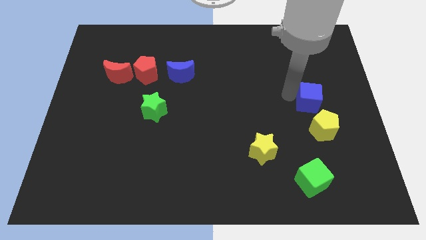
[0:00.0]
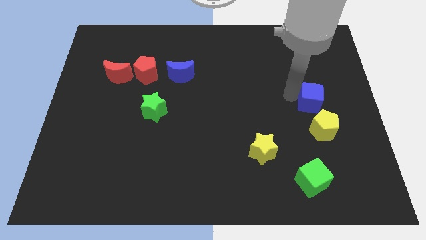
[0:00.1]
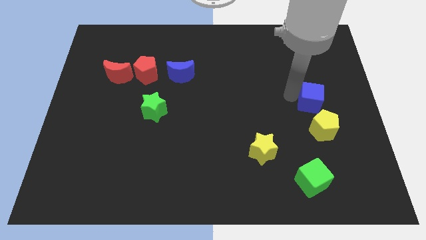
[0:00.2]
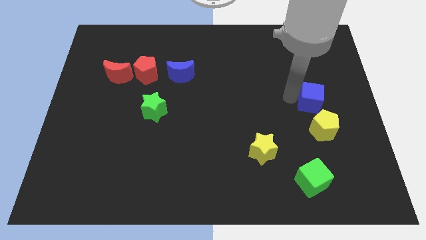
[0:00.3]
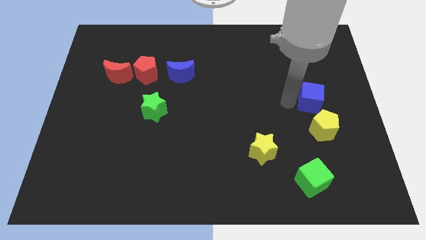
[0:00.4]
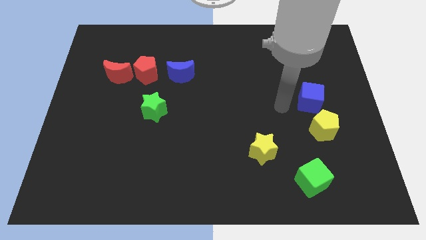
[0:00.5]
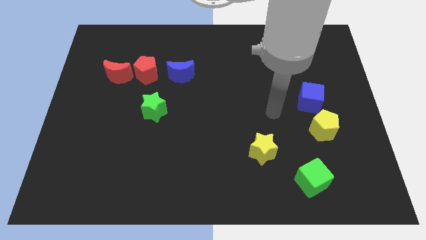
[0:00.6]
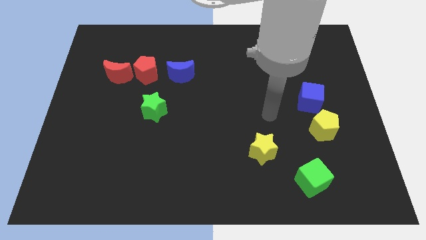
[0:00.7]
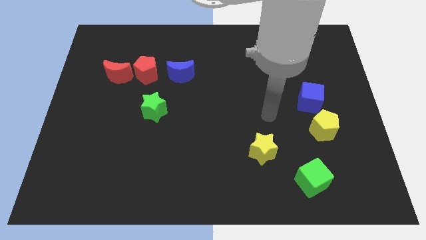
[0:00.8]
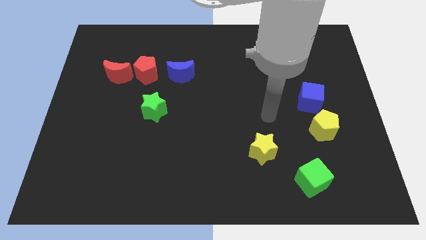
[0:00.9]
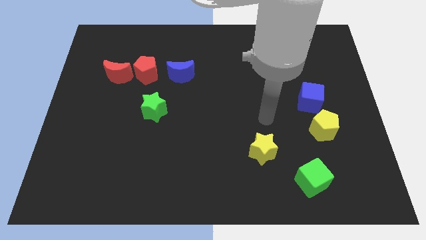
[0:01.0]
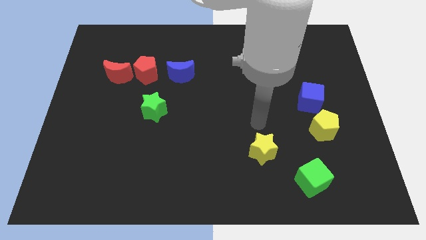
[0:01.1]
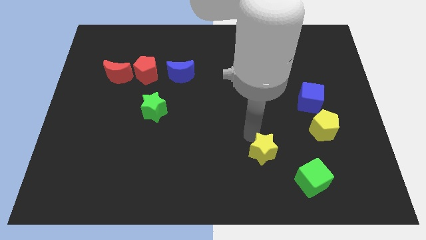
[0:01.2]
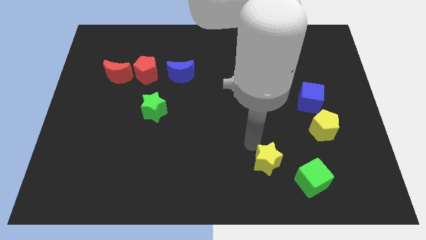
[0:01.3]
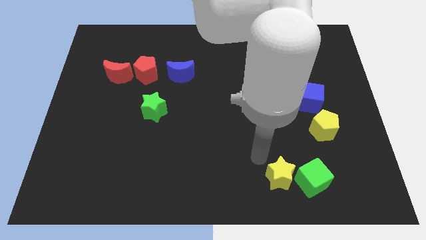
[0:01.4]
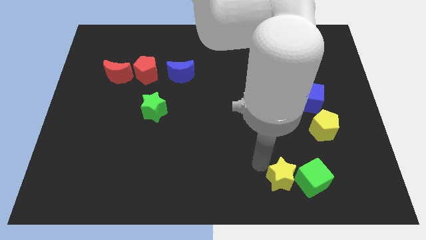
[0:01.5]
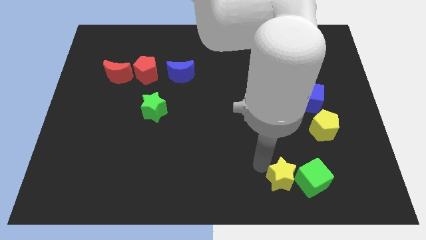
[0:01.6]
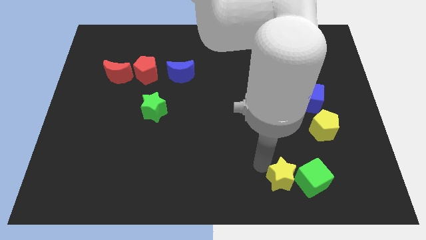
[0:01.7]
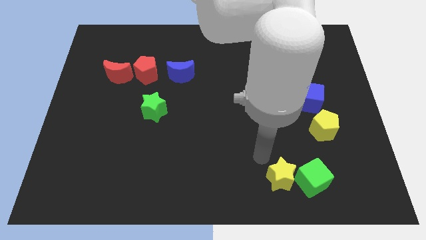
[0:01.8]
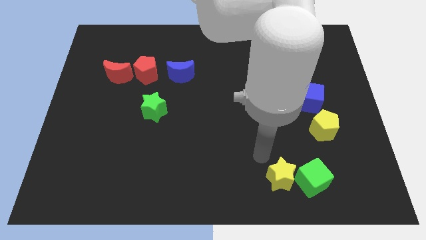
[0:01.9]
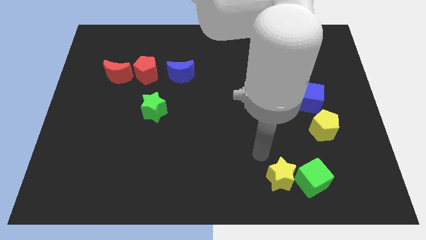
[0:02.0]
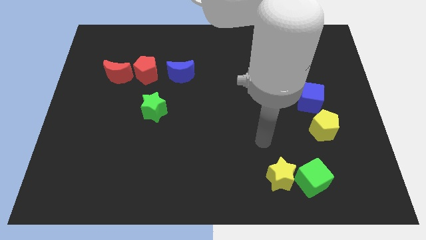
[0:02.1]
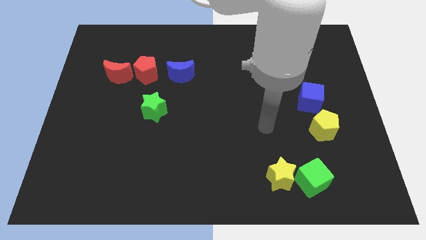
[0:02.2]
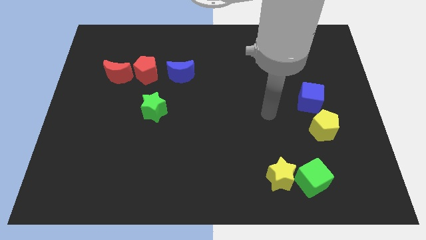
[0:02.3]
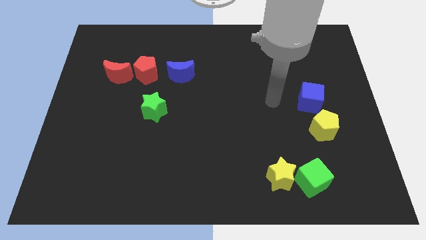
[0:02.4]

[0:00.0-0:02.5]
move the yellow star beside the green cube

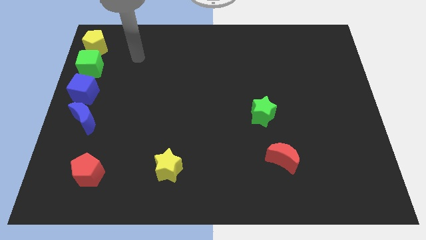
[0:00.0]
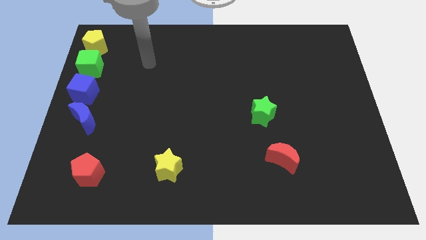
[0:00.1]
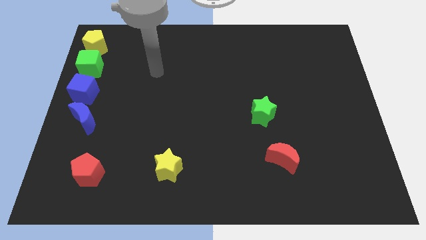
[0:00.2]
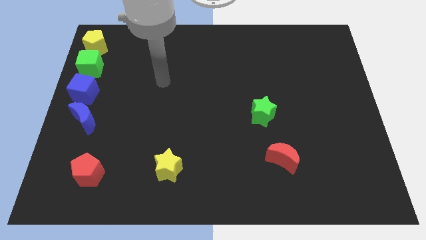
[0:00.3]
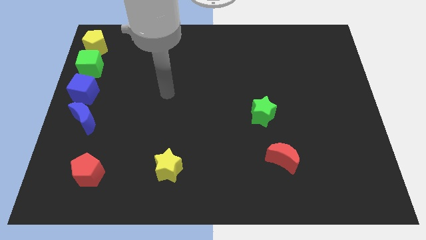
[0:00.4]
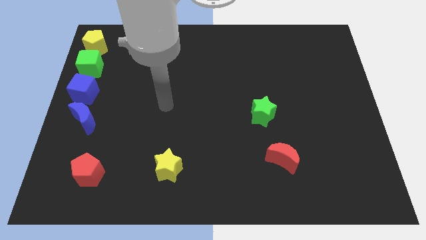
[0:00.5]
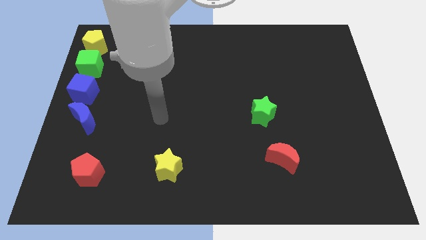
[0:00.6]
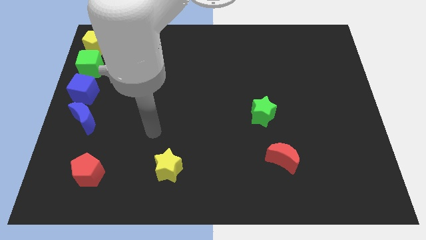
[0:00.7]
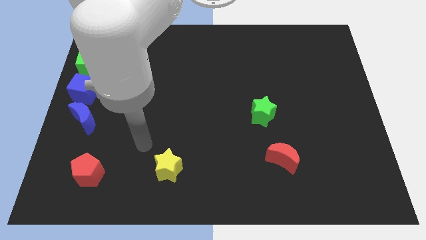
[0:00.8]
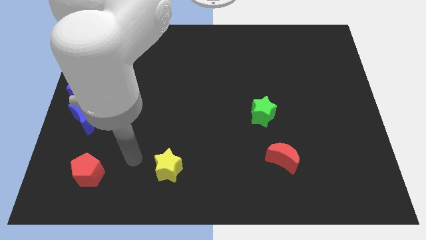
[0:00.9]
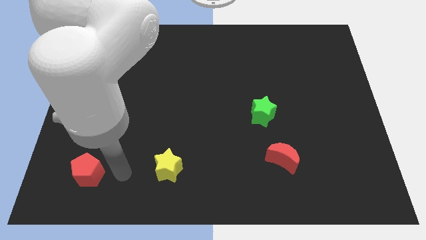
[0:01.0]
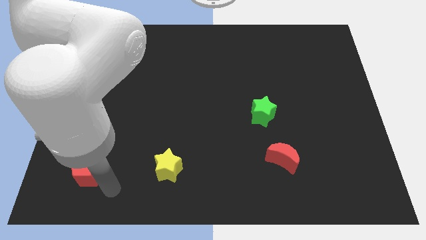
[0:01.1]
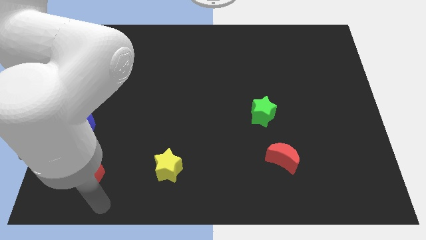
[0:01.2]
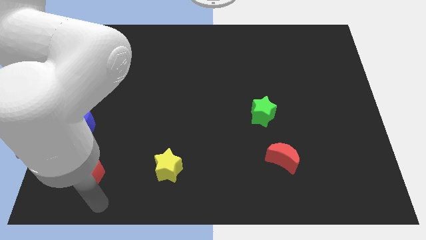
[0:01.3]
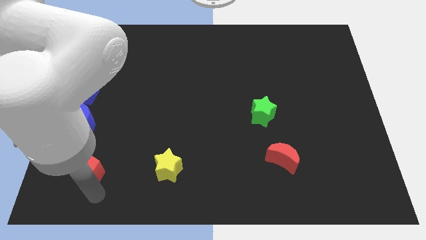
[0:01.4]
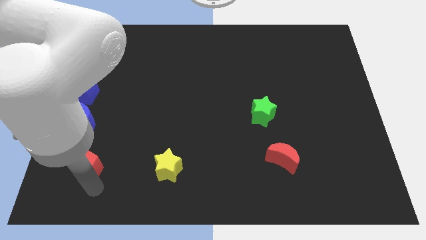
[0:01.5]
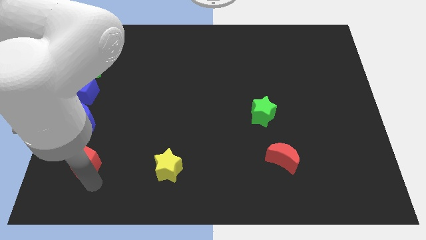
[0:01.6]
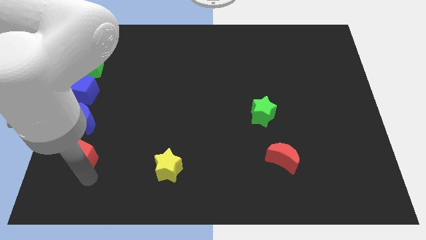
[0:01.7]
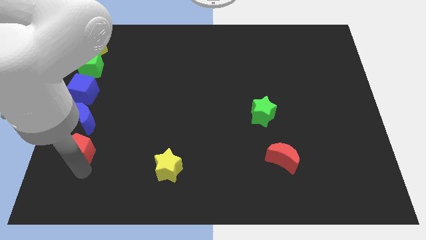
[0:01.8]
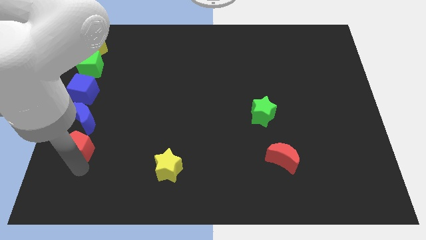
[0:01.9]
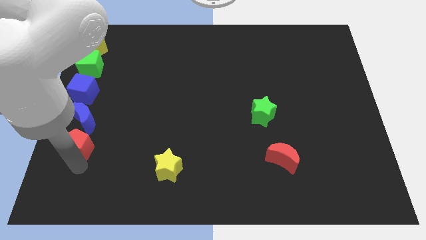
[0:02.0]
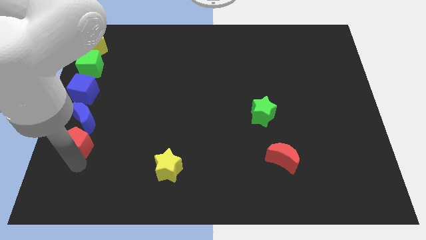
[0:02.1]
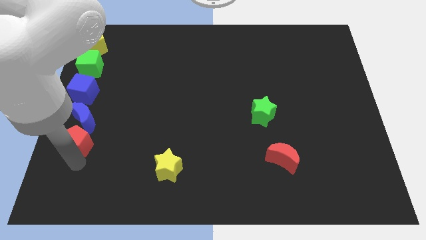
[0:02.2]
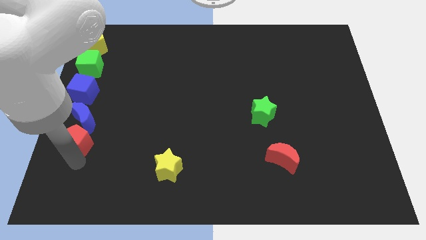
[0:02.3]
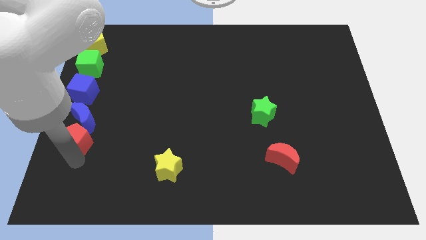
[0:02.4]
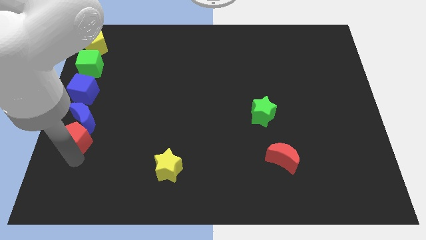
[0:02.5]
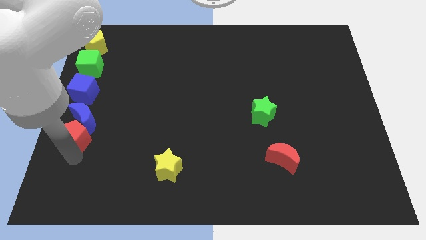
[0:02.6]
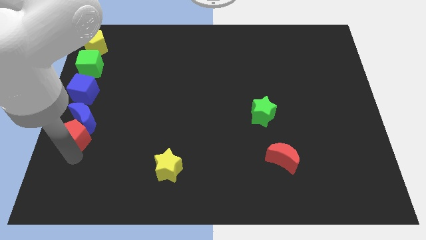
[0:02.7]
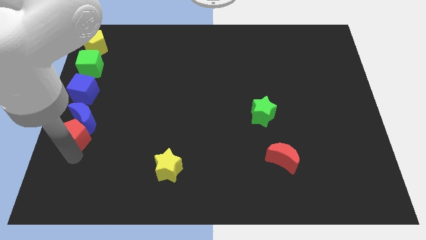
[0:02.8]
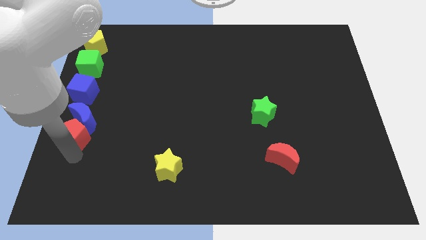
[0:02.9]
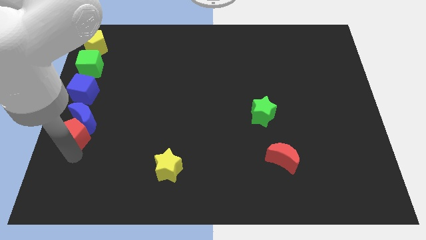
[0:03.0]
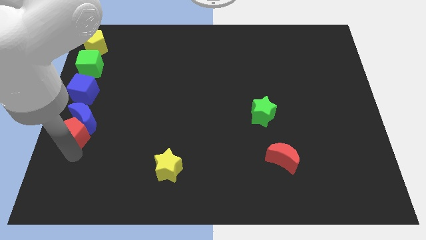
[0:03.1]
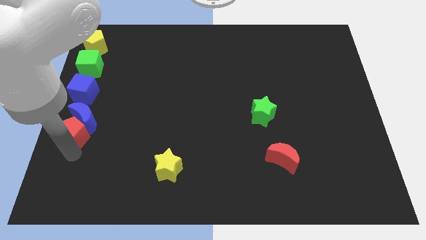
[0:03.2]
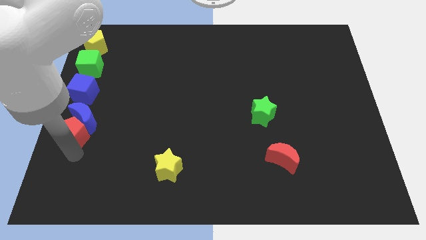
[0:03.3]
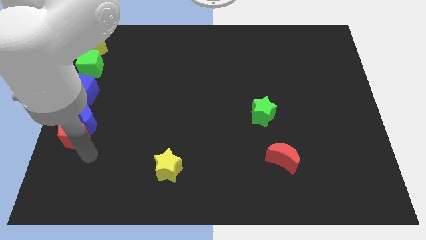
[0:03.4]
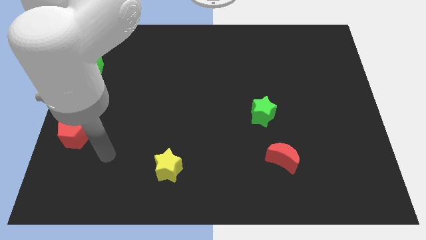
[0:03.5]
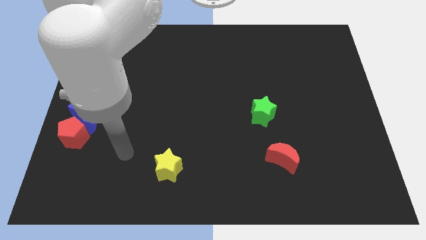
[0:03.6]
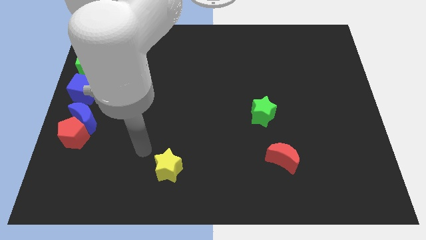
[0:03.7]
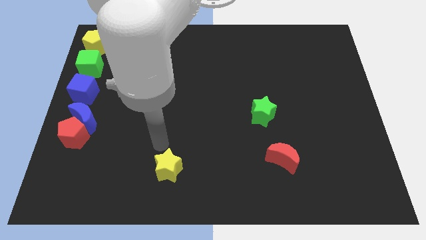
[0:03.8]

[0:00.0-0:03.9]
move the red pentagon into the blue crescent

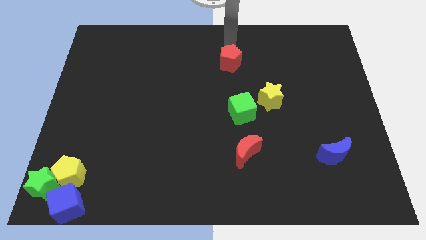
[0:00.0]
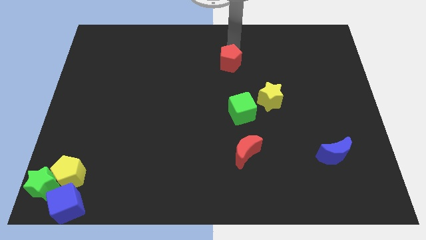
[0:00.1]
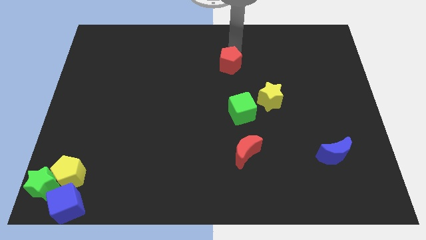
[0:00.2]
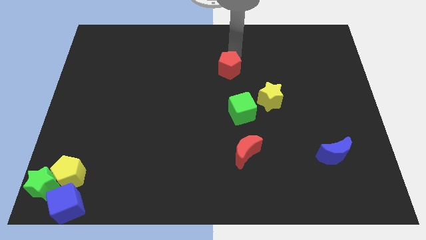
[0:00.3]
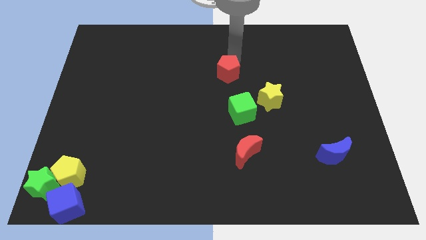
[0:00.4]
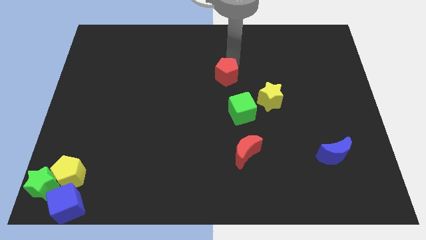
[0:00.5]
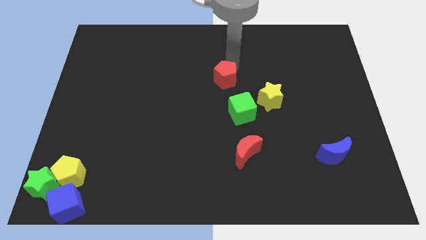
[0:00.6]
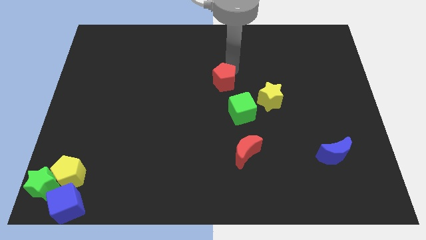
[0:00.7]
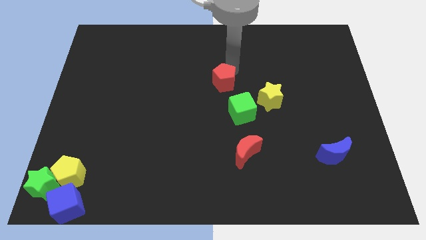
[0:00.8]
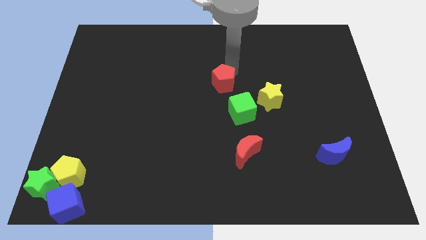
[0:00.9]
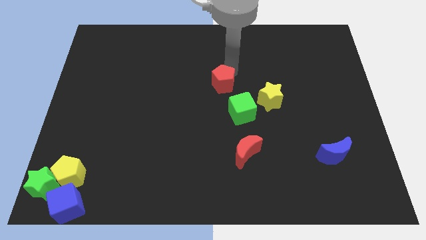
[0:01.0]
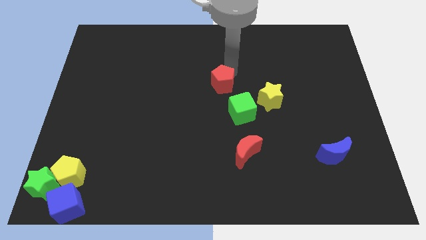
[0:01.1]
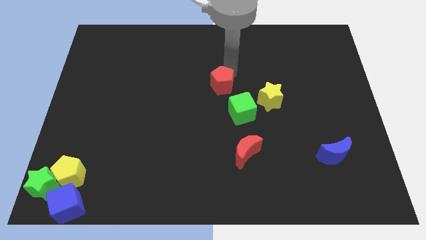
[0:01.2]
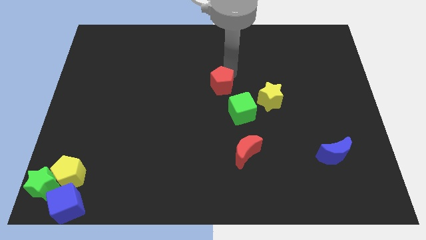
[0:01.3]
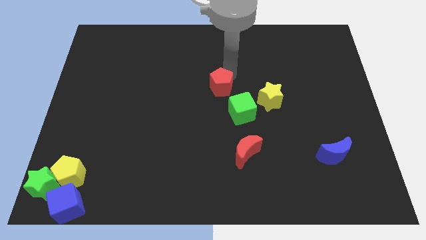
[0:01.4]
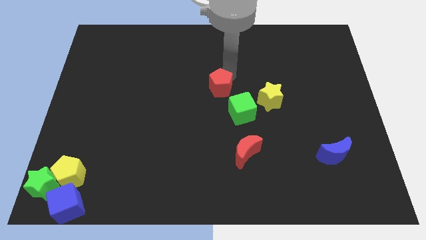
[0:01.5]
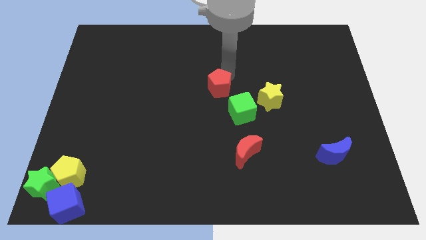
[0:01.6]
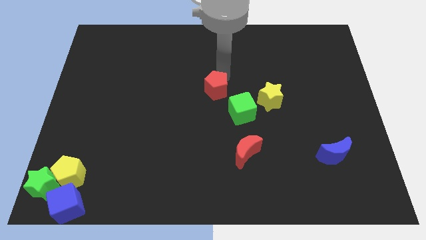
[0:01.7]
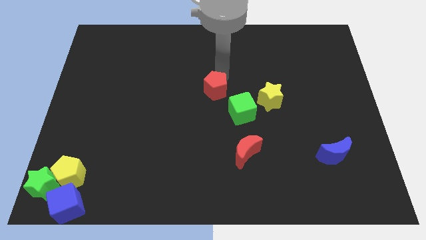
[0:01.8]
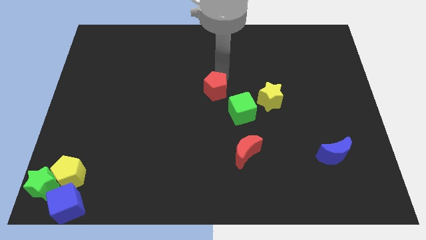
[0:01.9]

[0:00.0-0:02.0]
push the red pentagon to the top left of the green star

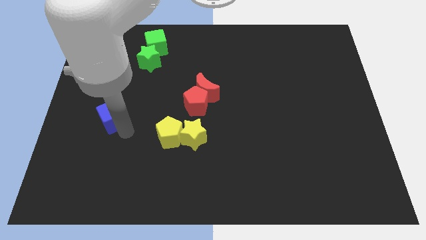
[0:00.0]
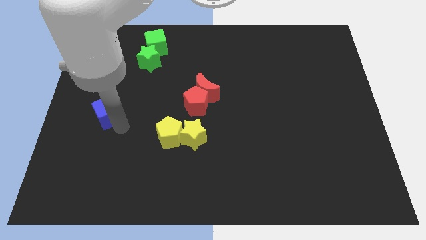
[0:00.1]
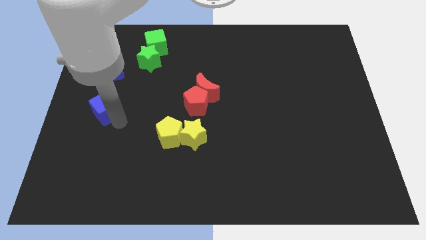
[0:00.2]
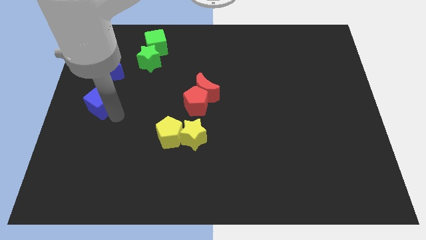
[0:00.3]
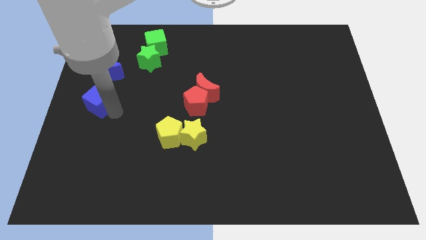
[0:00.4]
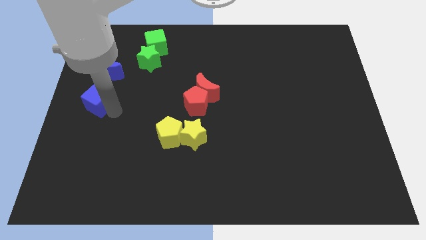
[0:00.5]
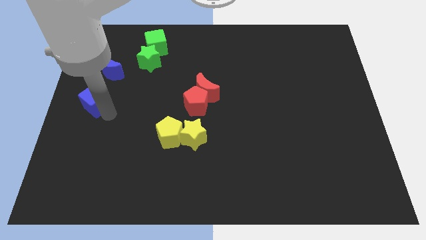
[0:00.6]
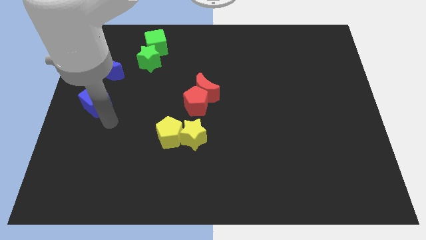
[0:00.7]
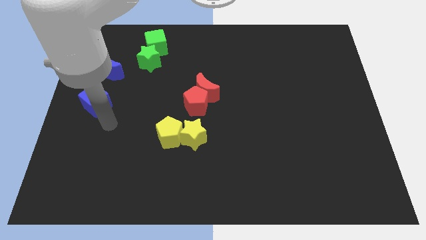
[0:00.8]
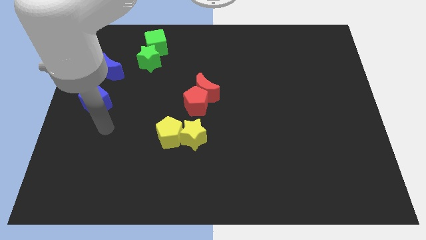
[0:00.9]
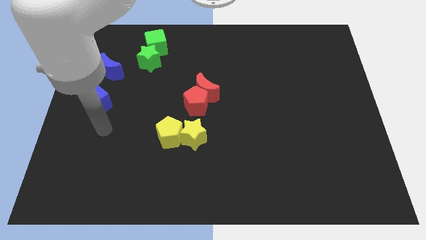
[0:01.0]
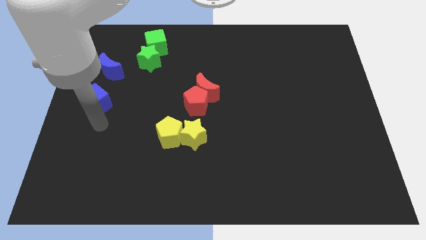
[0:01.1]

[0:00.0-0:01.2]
slightly move the blue cube towards the blue crescent on the left center of the board
